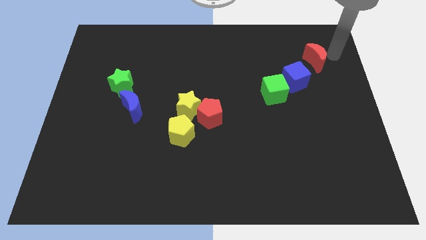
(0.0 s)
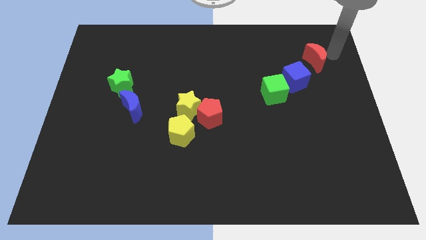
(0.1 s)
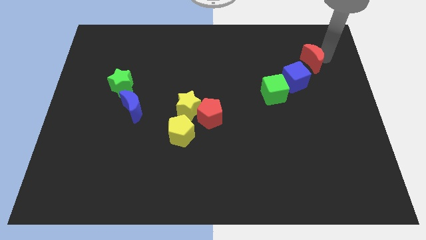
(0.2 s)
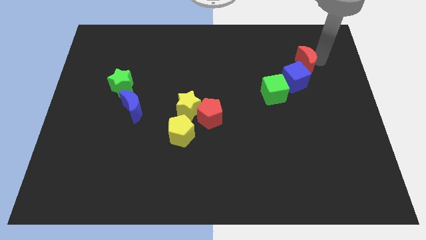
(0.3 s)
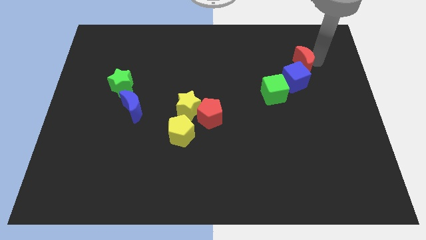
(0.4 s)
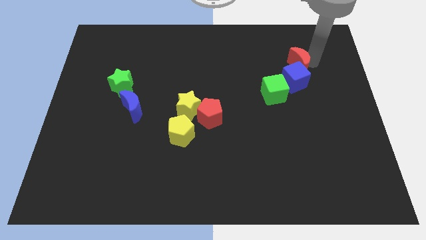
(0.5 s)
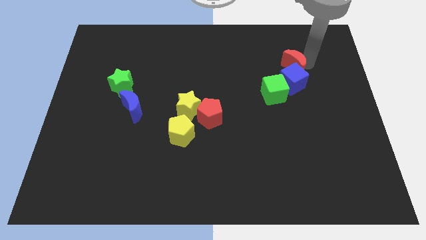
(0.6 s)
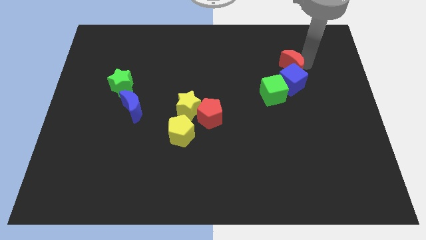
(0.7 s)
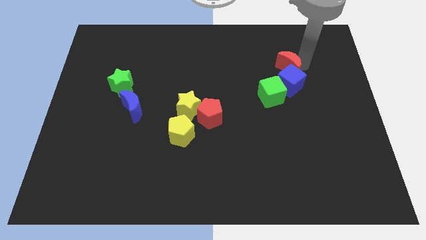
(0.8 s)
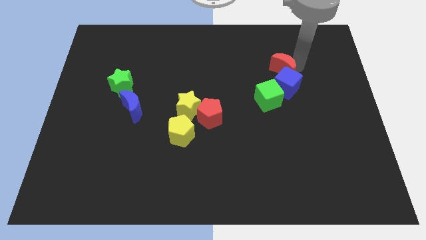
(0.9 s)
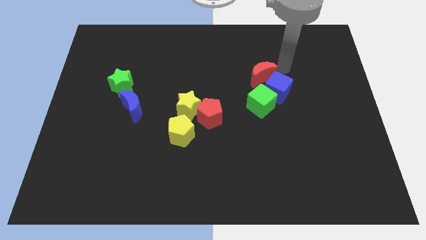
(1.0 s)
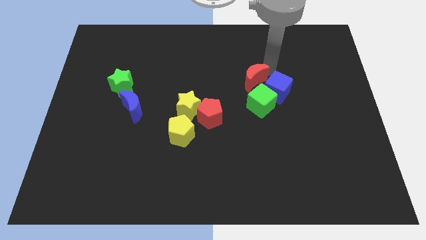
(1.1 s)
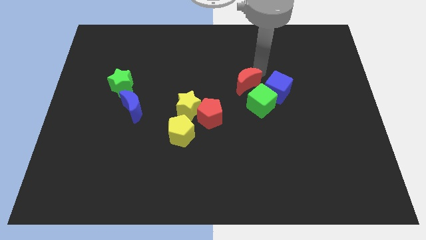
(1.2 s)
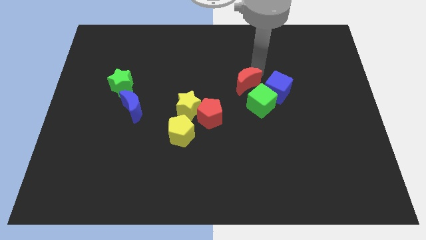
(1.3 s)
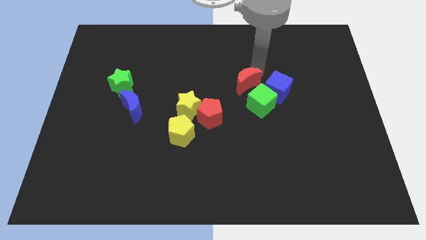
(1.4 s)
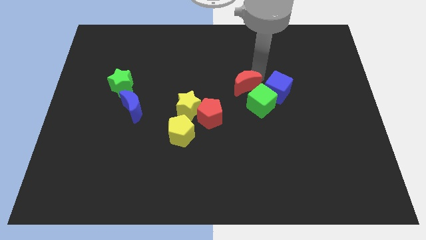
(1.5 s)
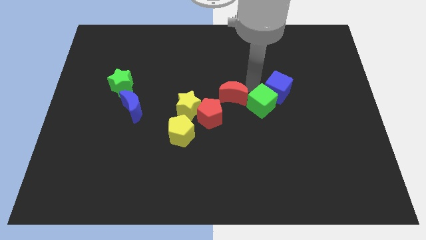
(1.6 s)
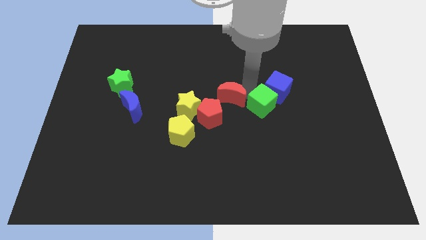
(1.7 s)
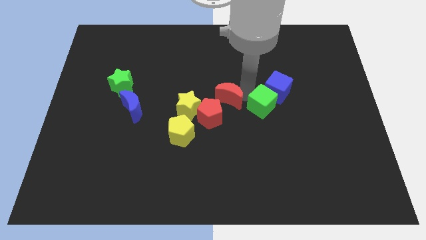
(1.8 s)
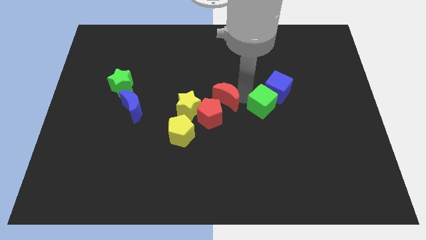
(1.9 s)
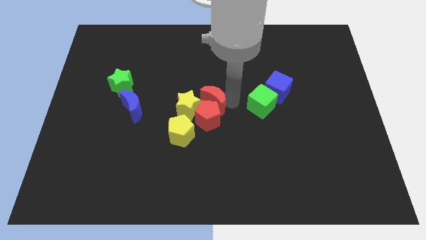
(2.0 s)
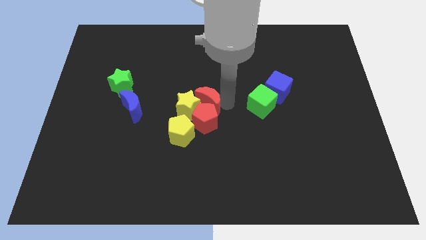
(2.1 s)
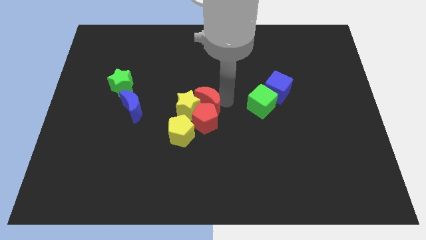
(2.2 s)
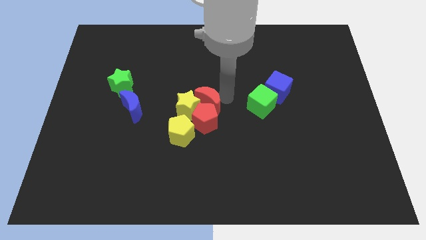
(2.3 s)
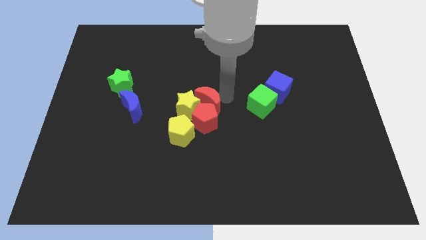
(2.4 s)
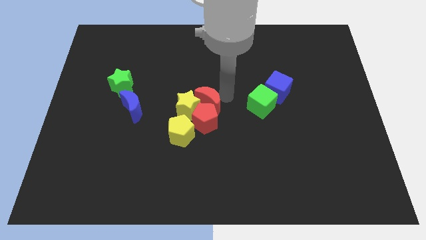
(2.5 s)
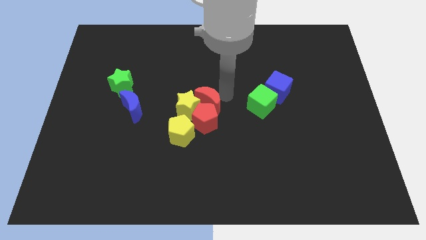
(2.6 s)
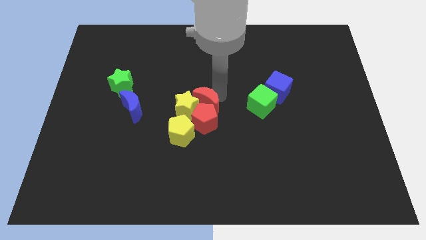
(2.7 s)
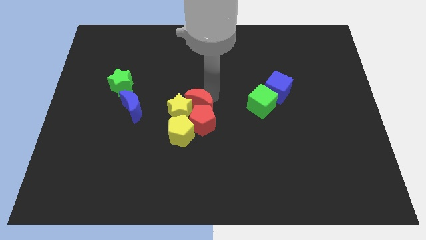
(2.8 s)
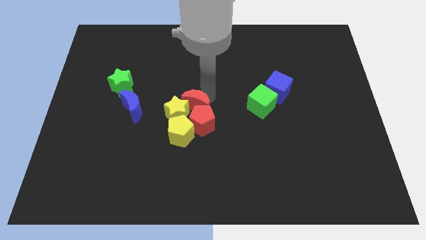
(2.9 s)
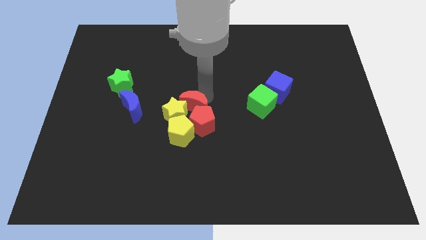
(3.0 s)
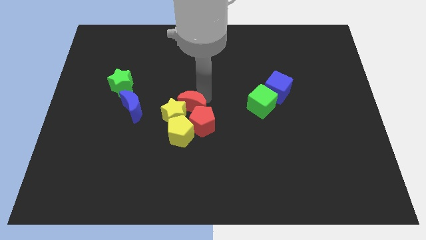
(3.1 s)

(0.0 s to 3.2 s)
push the red crescent into the yellow star and red pentagon

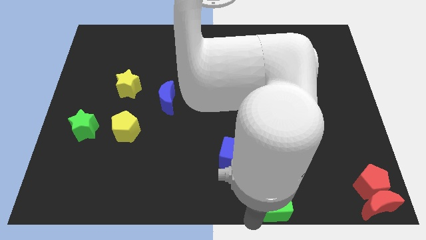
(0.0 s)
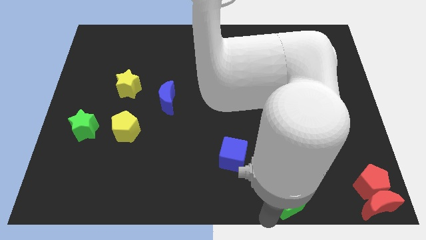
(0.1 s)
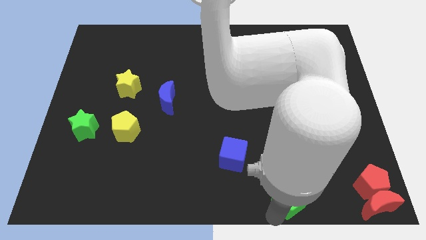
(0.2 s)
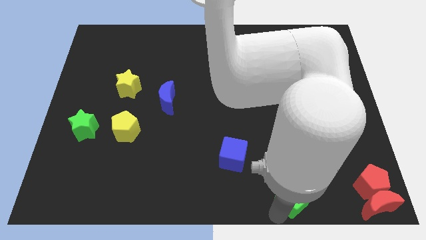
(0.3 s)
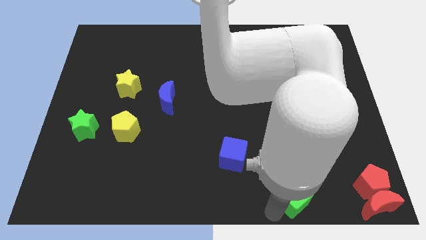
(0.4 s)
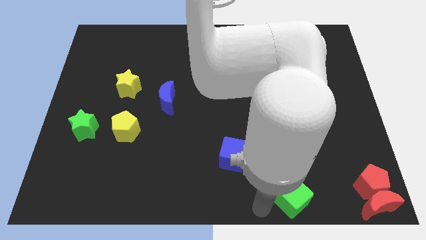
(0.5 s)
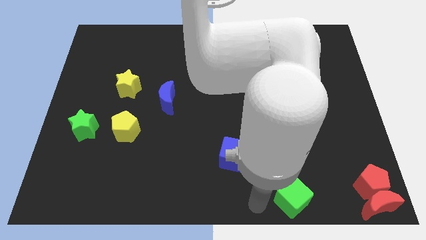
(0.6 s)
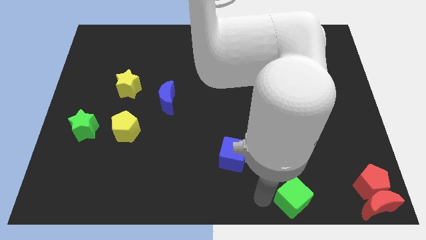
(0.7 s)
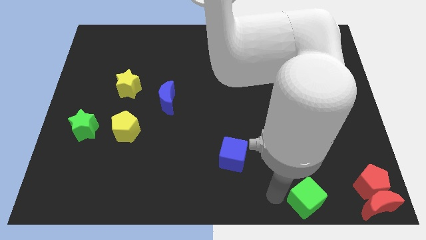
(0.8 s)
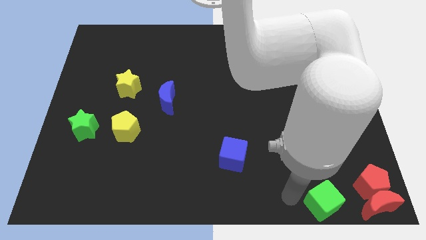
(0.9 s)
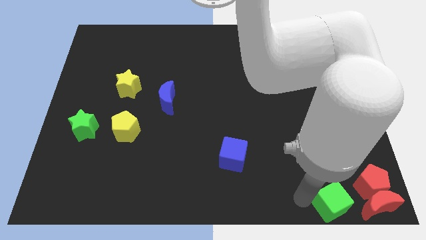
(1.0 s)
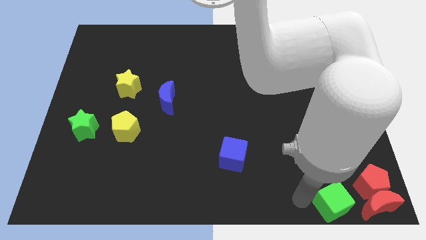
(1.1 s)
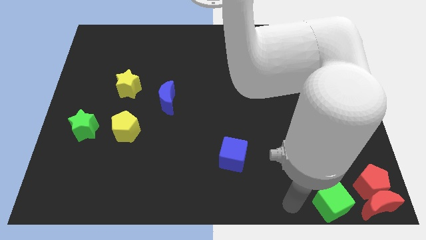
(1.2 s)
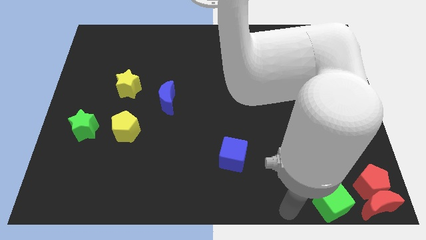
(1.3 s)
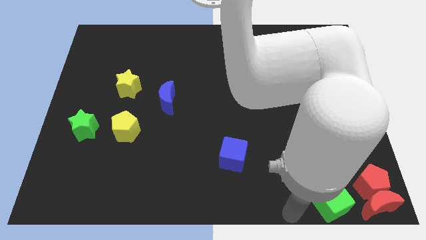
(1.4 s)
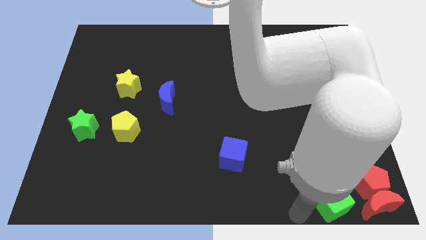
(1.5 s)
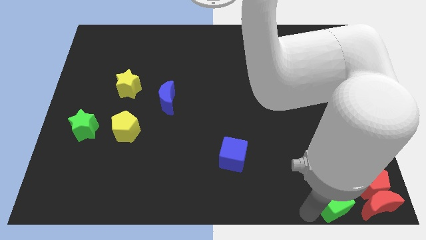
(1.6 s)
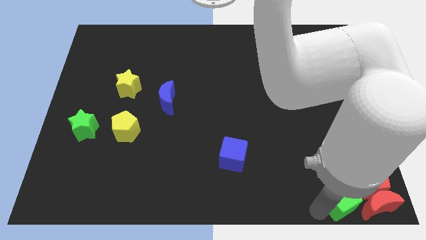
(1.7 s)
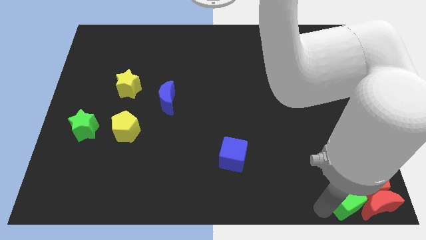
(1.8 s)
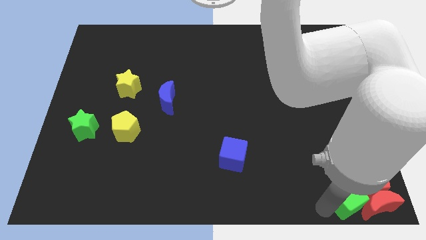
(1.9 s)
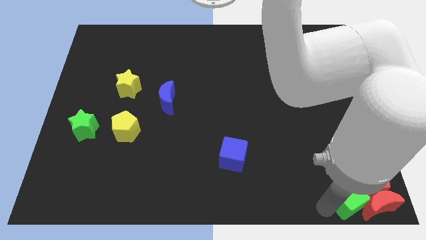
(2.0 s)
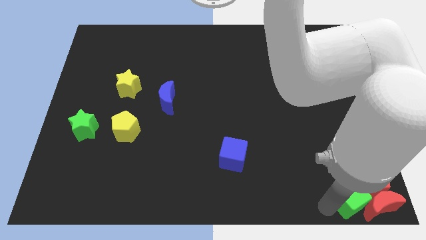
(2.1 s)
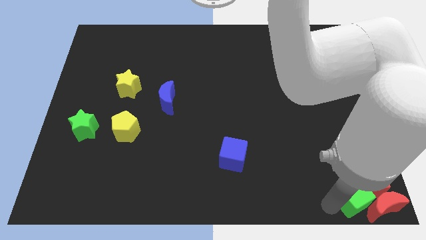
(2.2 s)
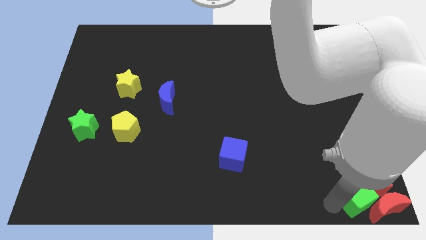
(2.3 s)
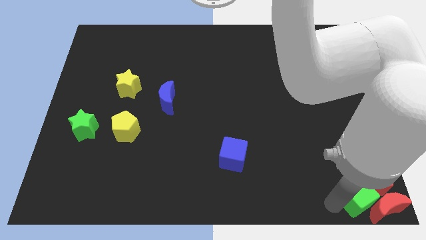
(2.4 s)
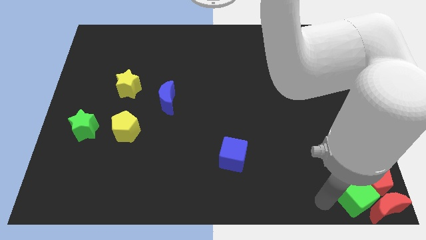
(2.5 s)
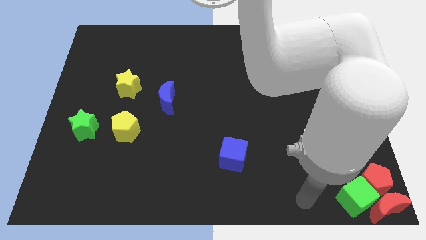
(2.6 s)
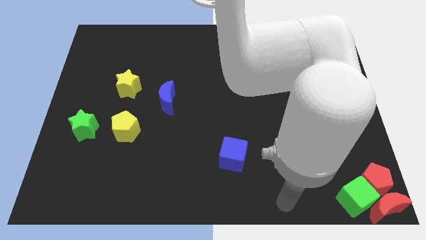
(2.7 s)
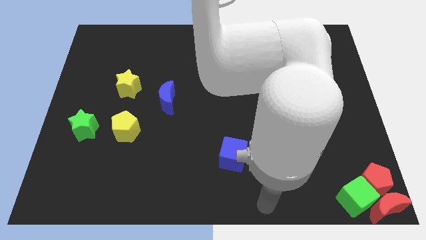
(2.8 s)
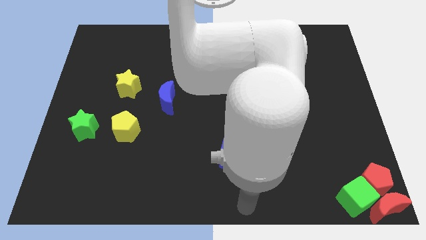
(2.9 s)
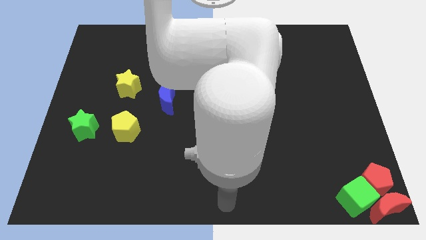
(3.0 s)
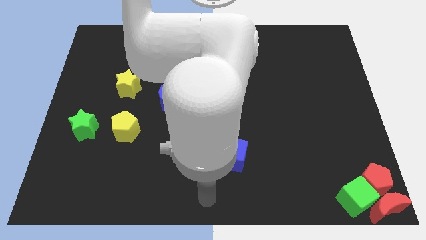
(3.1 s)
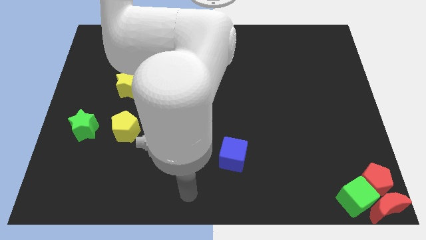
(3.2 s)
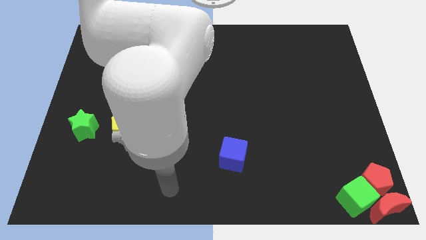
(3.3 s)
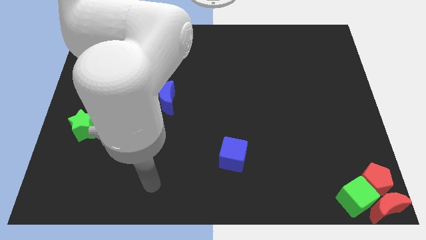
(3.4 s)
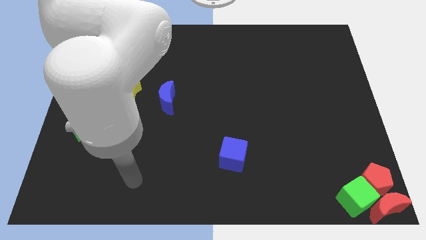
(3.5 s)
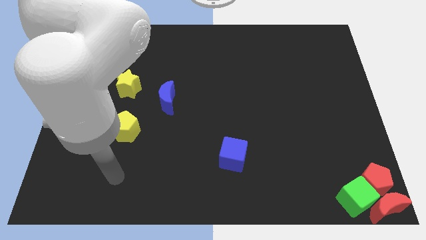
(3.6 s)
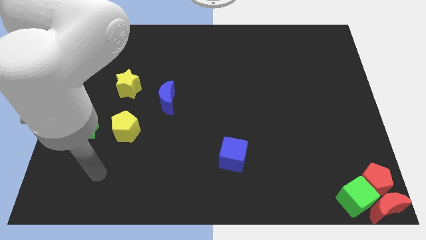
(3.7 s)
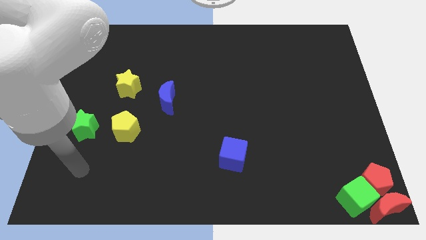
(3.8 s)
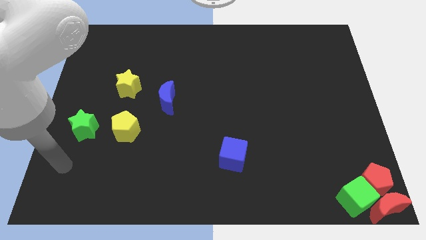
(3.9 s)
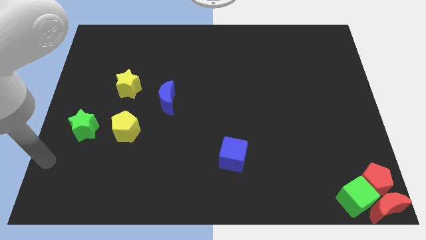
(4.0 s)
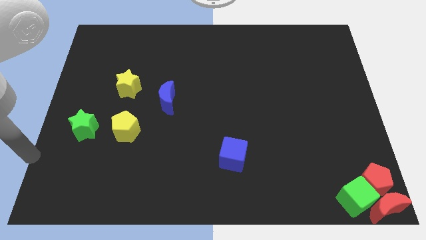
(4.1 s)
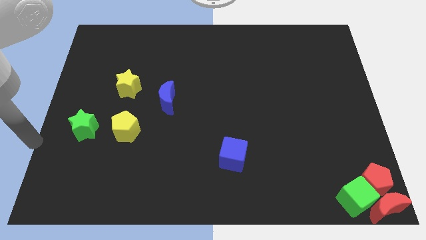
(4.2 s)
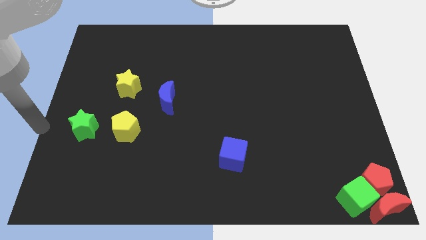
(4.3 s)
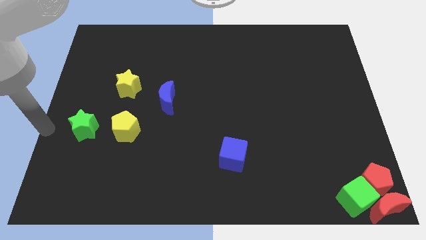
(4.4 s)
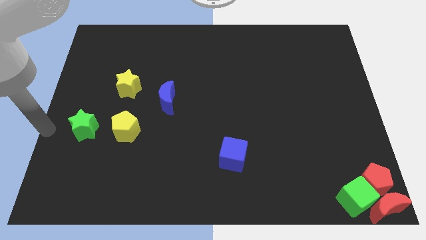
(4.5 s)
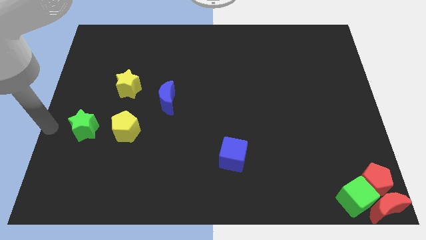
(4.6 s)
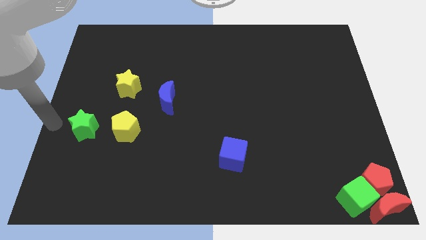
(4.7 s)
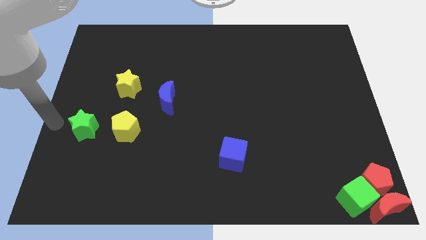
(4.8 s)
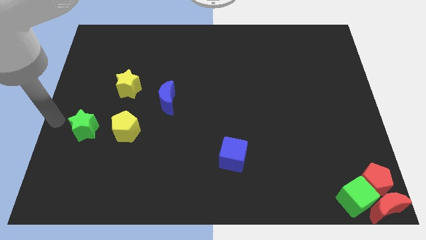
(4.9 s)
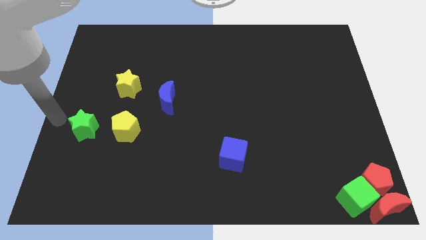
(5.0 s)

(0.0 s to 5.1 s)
push the green cube into red blocks and move away

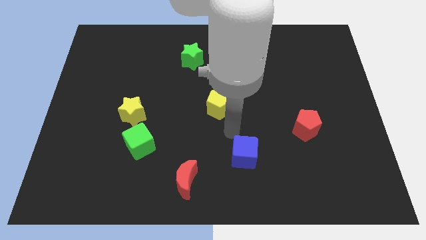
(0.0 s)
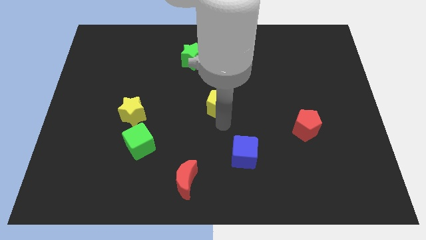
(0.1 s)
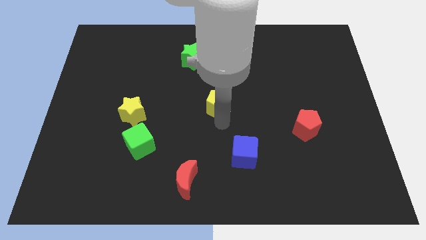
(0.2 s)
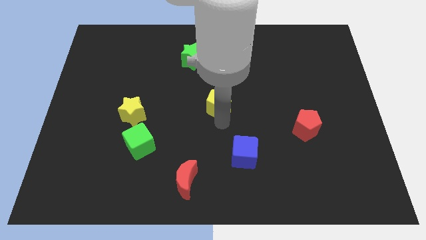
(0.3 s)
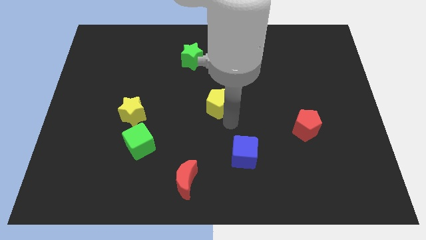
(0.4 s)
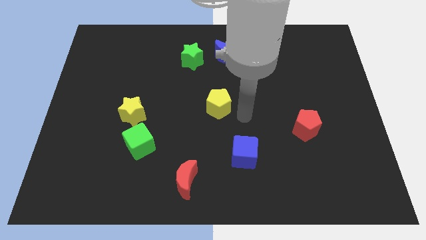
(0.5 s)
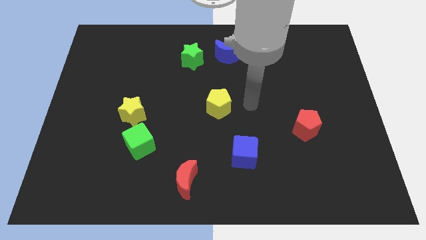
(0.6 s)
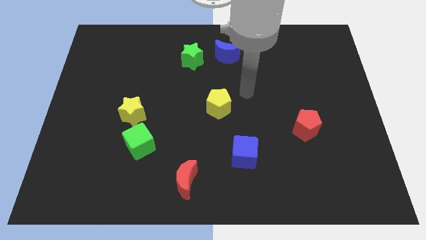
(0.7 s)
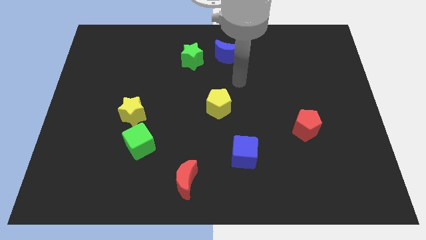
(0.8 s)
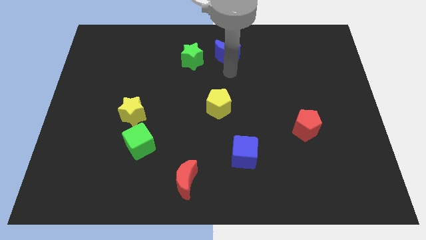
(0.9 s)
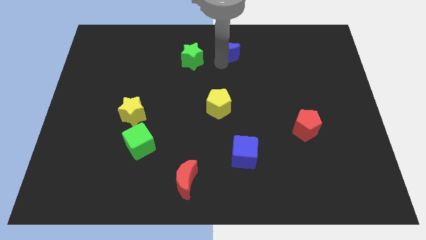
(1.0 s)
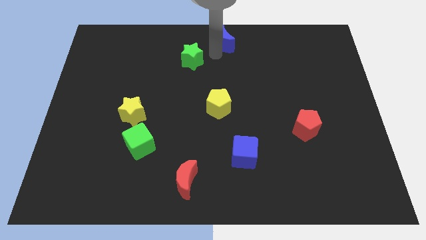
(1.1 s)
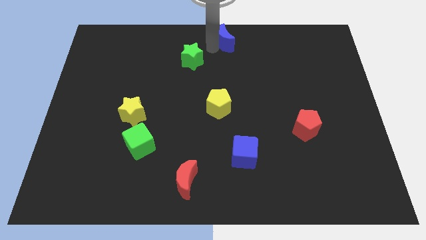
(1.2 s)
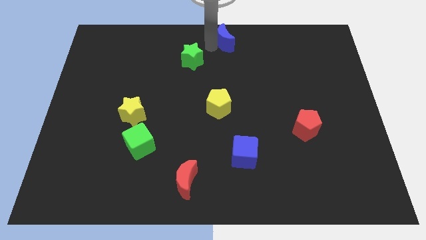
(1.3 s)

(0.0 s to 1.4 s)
push the blue crescent to its right slightly
